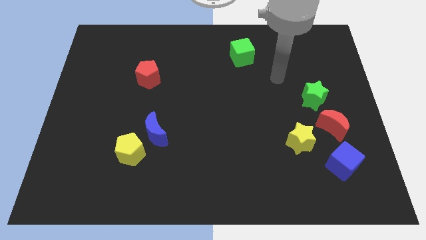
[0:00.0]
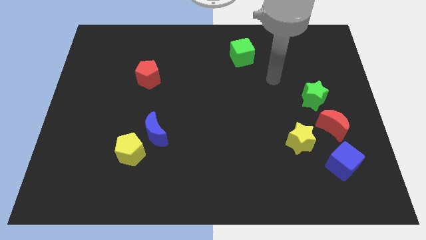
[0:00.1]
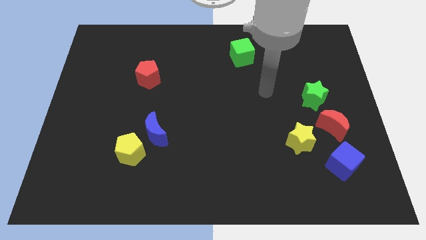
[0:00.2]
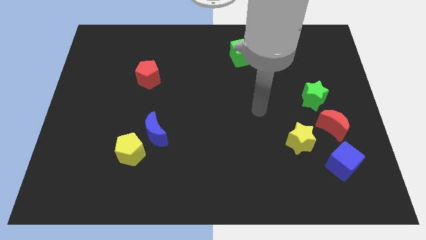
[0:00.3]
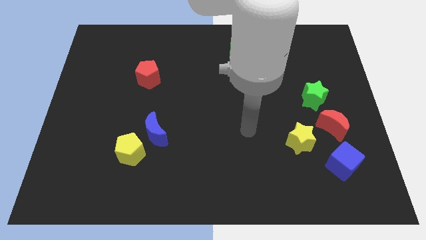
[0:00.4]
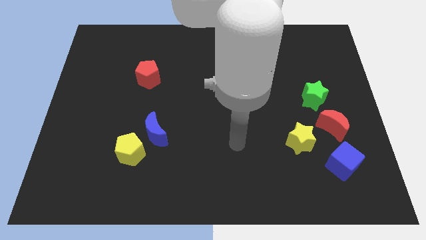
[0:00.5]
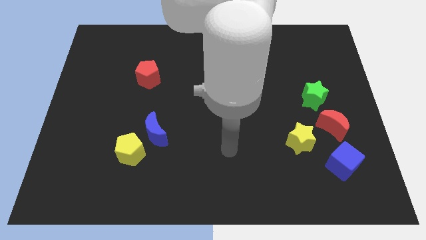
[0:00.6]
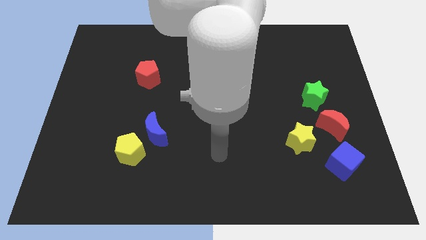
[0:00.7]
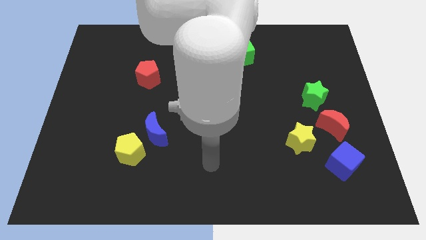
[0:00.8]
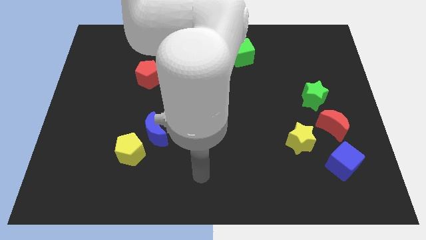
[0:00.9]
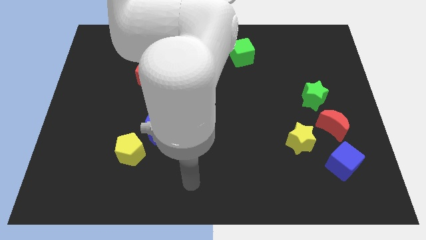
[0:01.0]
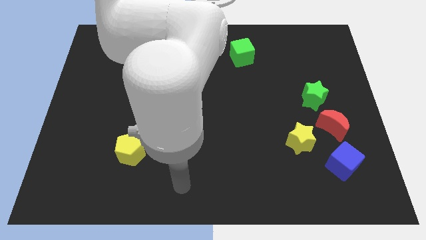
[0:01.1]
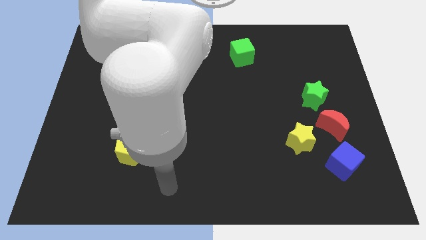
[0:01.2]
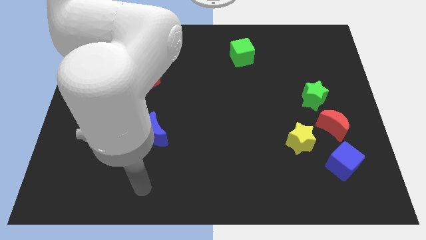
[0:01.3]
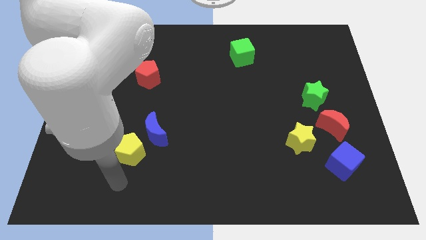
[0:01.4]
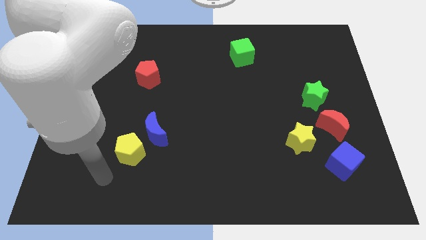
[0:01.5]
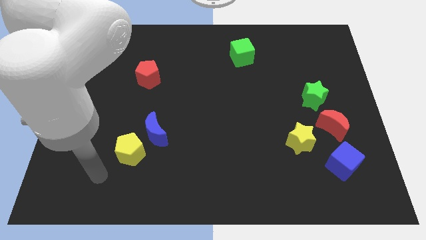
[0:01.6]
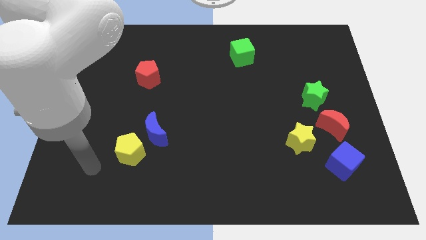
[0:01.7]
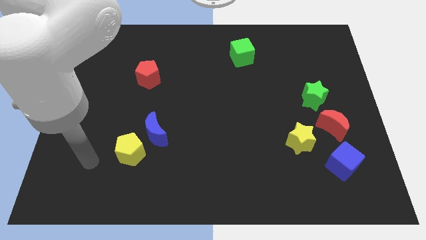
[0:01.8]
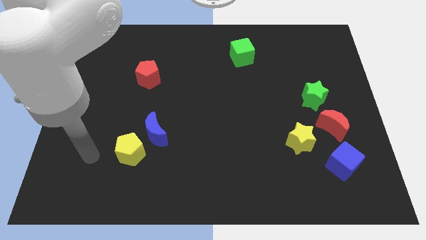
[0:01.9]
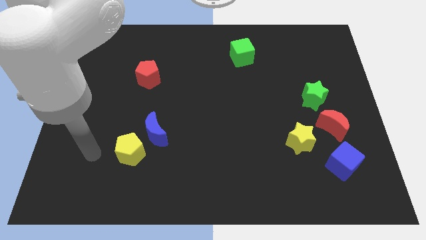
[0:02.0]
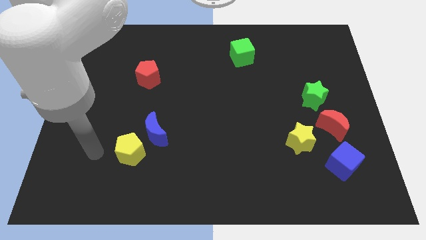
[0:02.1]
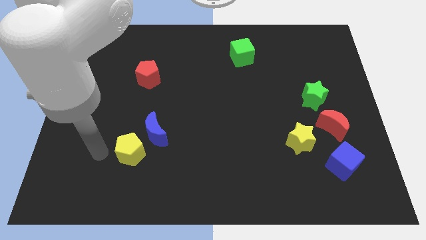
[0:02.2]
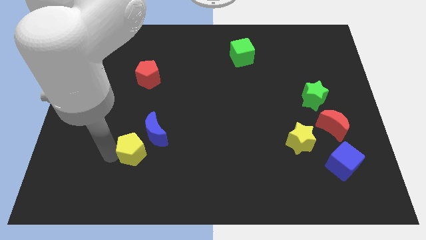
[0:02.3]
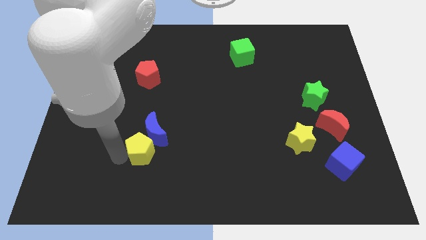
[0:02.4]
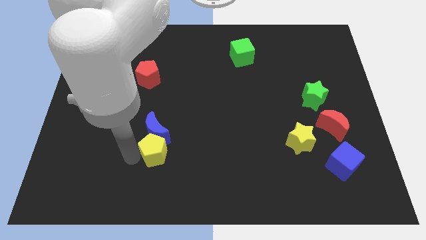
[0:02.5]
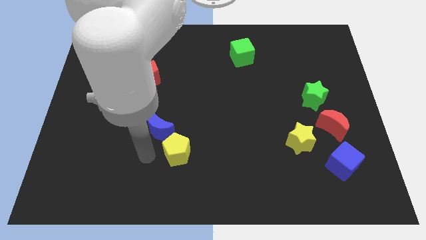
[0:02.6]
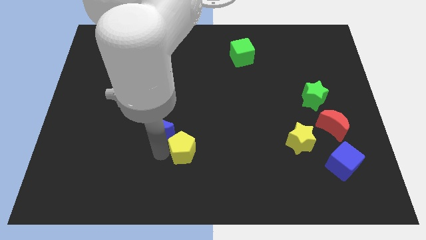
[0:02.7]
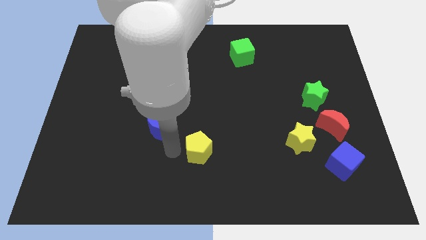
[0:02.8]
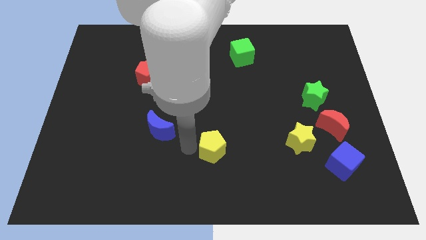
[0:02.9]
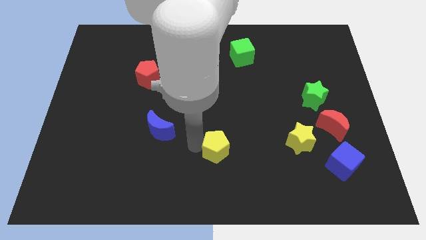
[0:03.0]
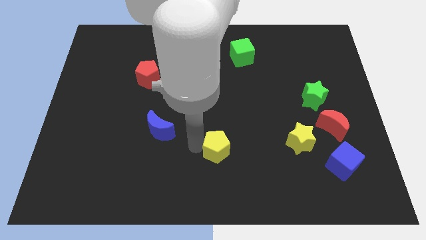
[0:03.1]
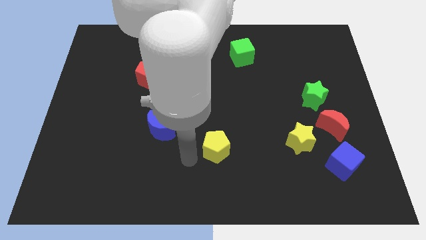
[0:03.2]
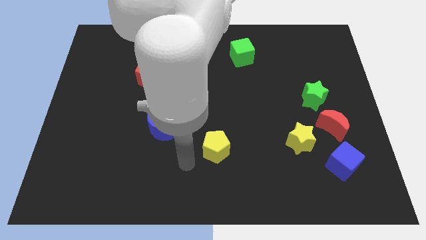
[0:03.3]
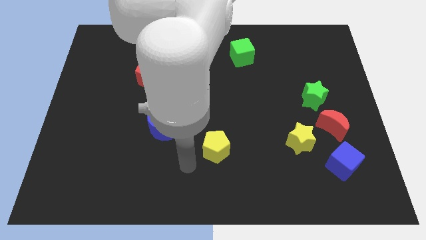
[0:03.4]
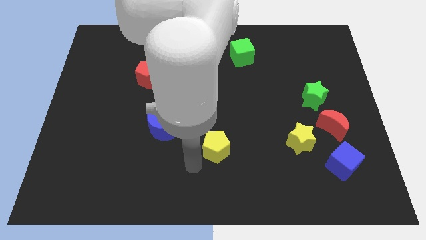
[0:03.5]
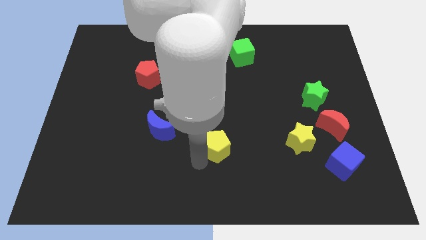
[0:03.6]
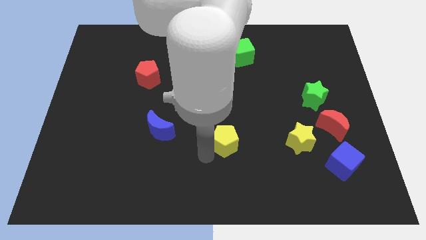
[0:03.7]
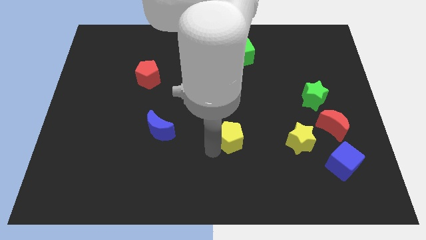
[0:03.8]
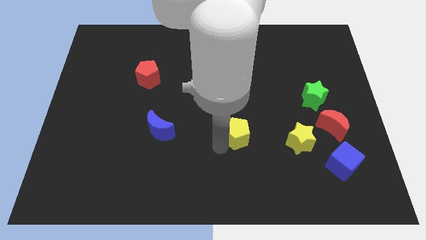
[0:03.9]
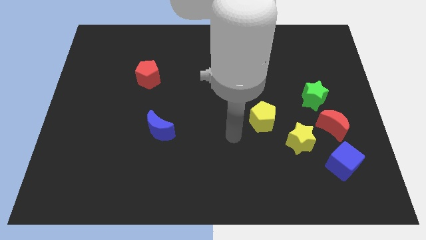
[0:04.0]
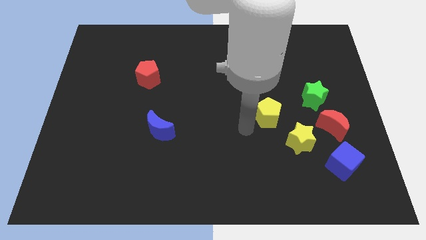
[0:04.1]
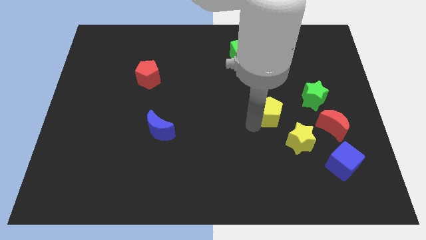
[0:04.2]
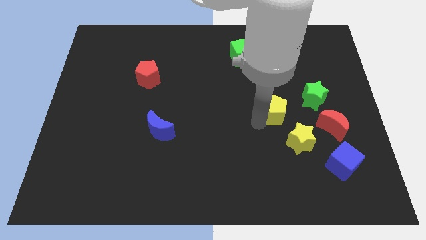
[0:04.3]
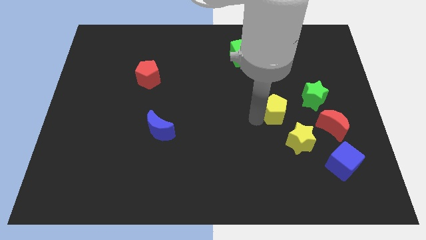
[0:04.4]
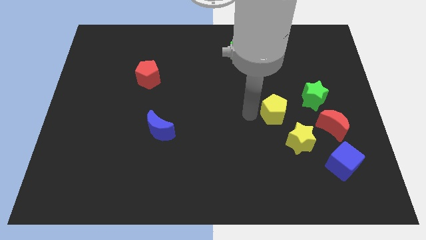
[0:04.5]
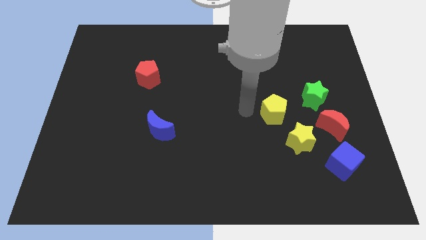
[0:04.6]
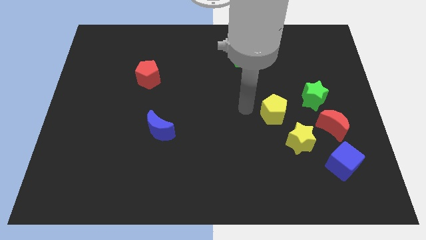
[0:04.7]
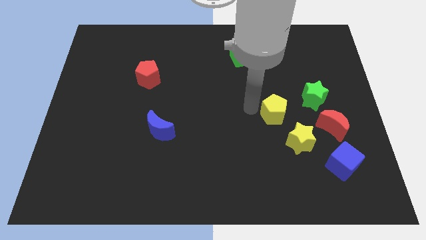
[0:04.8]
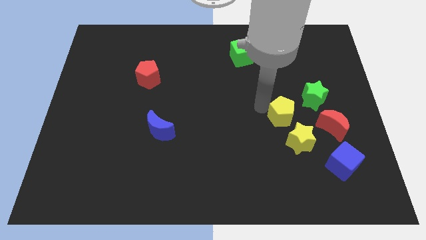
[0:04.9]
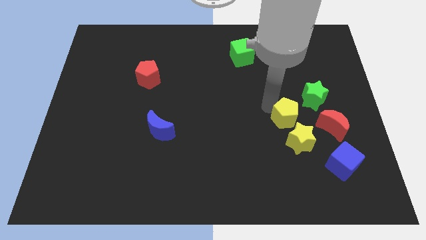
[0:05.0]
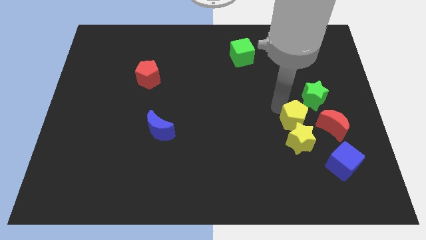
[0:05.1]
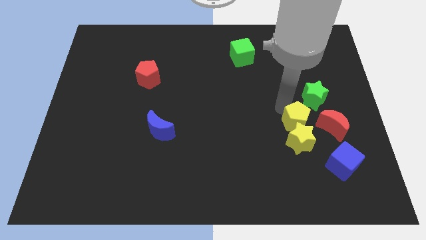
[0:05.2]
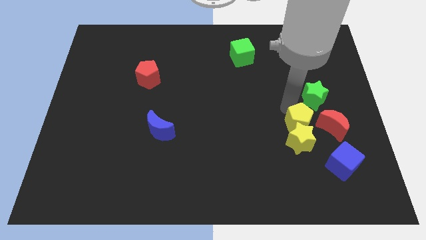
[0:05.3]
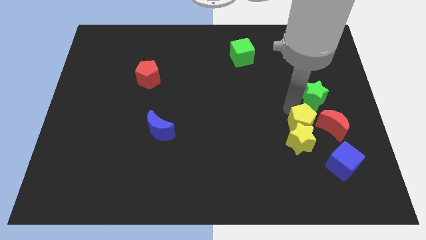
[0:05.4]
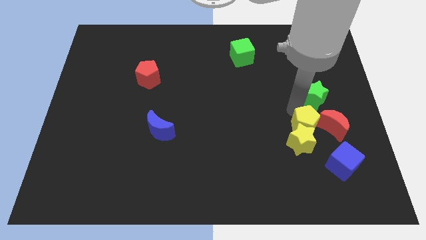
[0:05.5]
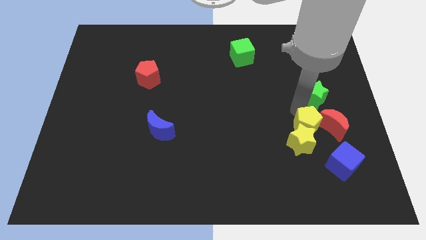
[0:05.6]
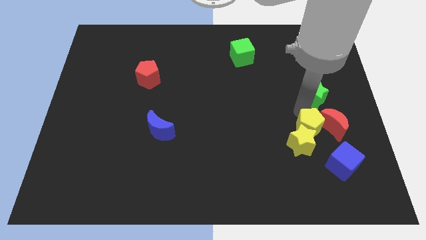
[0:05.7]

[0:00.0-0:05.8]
put the yellow pentagon next to the red moon

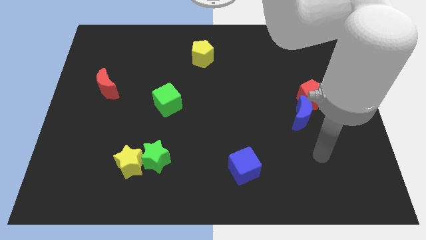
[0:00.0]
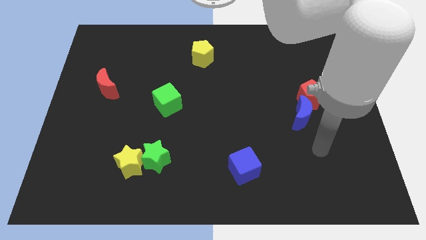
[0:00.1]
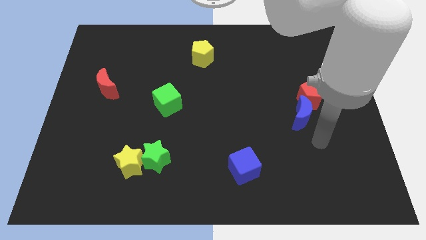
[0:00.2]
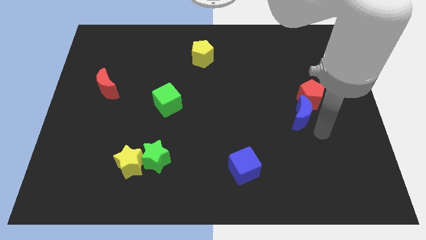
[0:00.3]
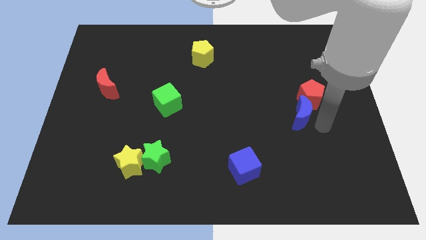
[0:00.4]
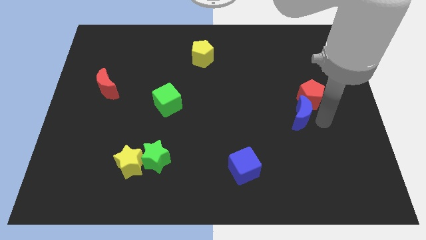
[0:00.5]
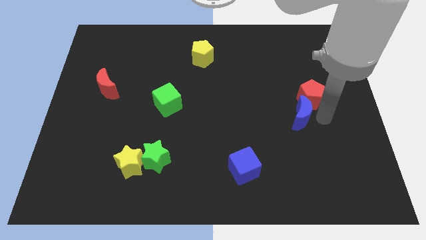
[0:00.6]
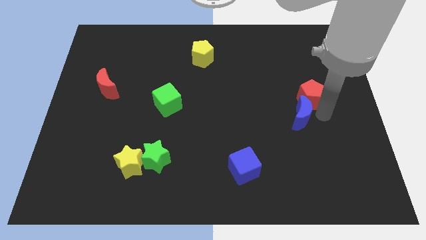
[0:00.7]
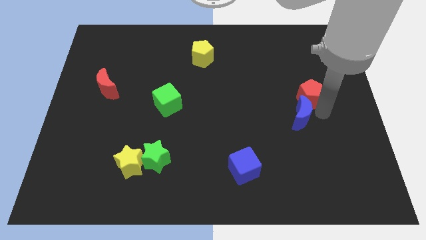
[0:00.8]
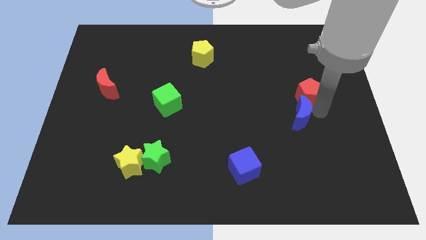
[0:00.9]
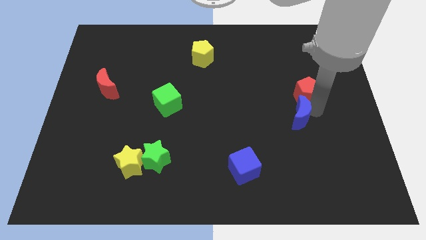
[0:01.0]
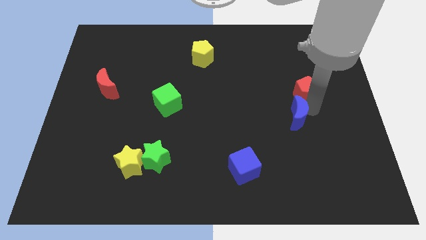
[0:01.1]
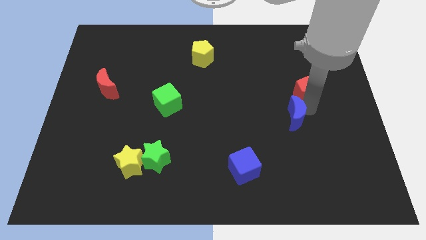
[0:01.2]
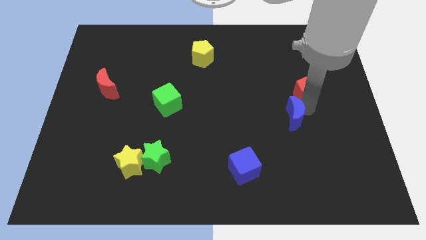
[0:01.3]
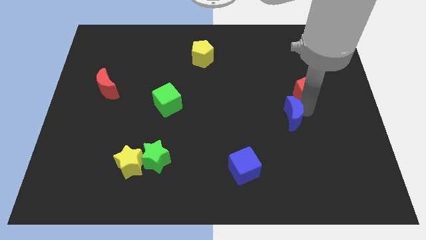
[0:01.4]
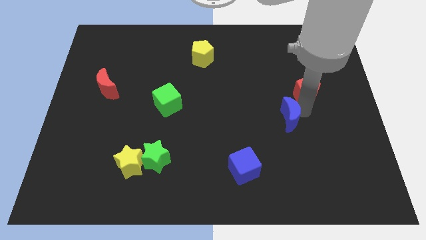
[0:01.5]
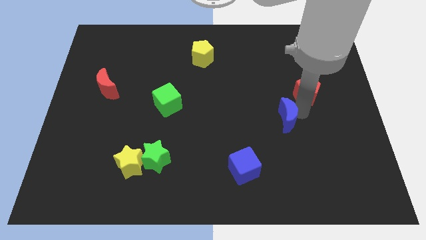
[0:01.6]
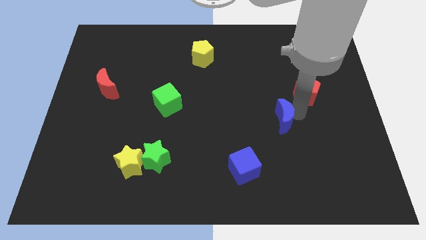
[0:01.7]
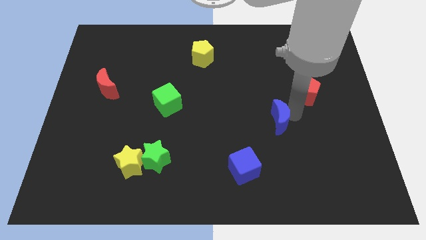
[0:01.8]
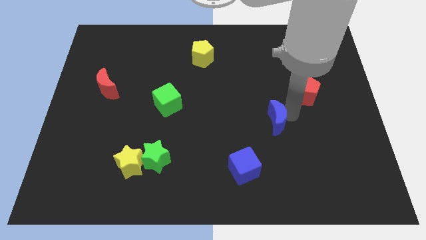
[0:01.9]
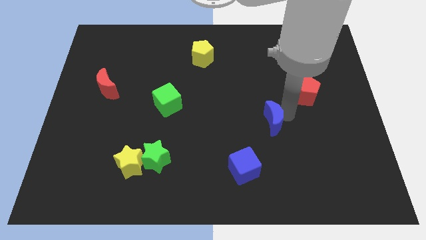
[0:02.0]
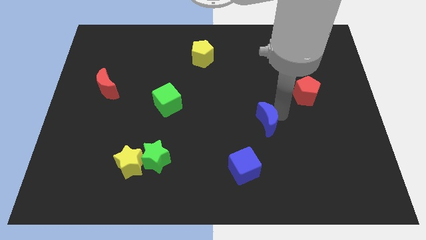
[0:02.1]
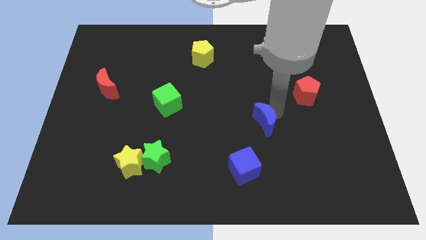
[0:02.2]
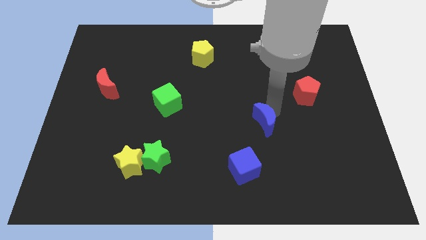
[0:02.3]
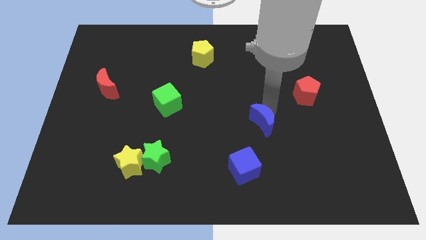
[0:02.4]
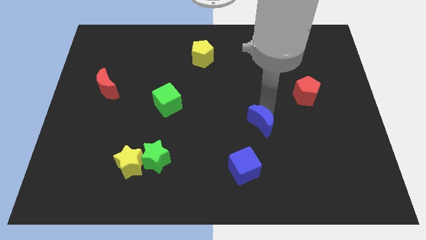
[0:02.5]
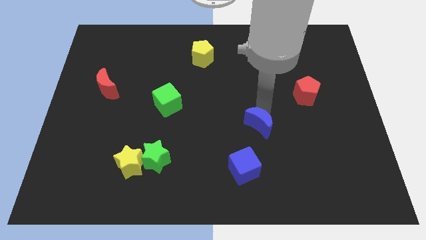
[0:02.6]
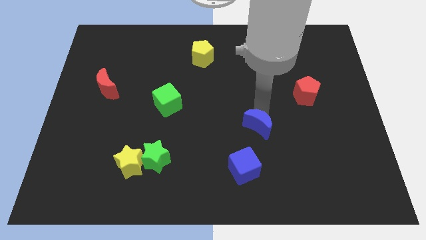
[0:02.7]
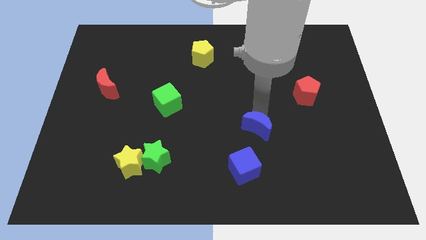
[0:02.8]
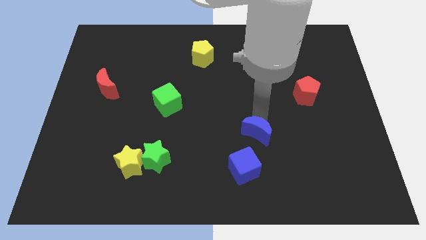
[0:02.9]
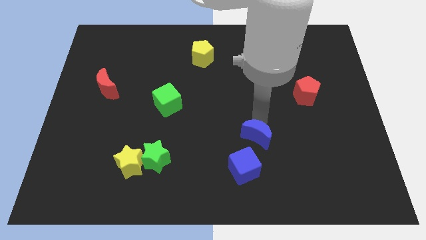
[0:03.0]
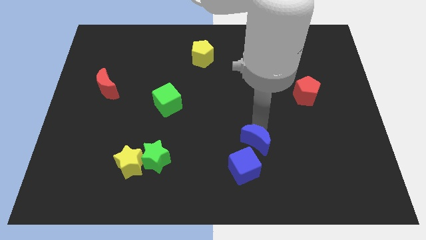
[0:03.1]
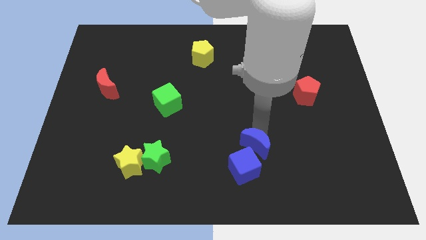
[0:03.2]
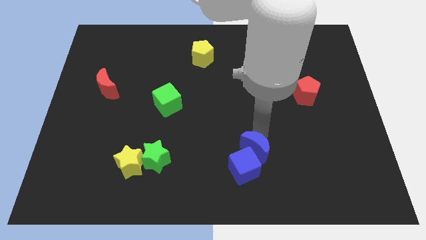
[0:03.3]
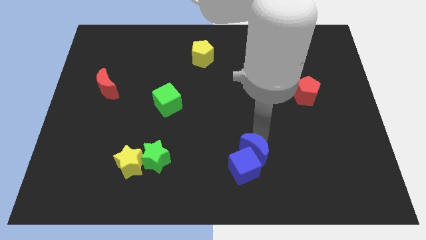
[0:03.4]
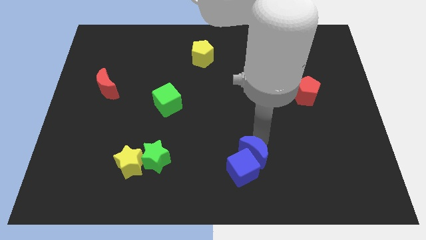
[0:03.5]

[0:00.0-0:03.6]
move the blue moon to the blue cube
